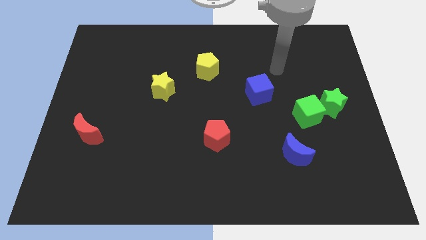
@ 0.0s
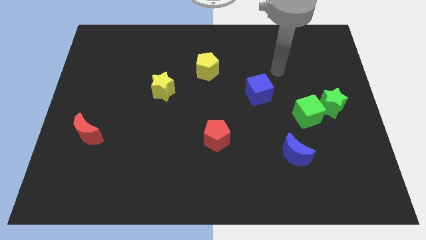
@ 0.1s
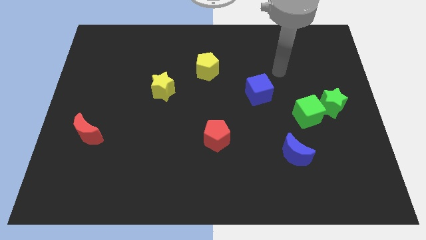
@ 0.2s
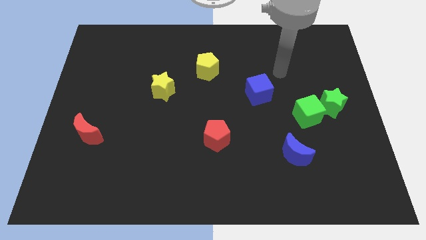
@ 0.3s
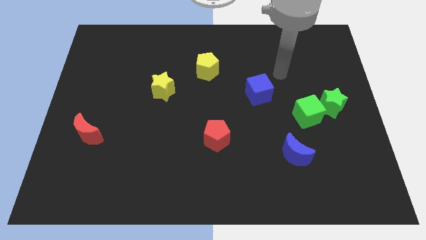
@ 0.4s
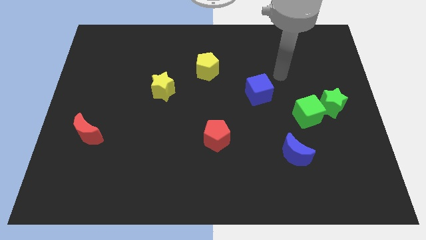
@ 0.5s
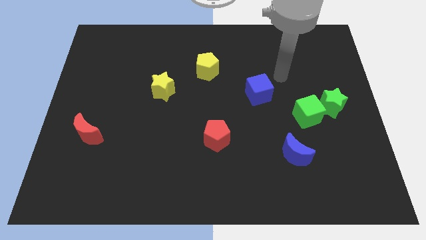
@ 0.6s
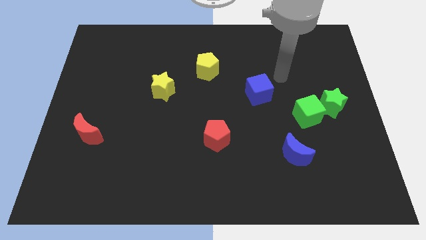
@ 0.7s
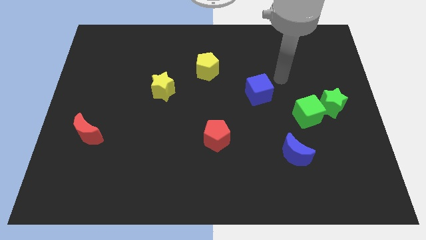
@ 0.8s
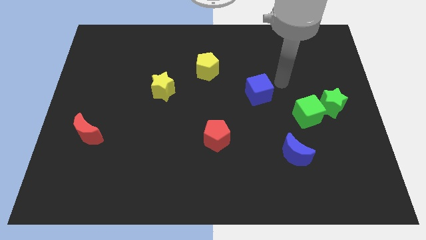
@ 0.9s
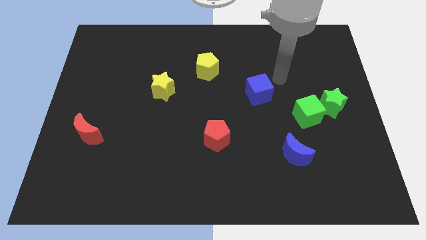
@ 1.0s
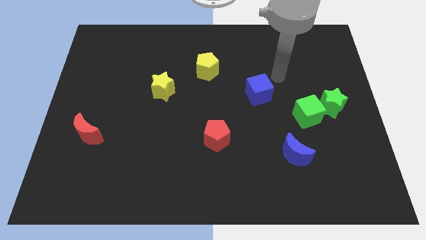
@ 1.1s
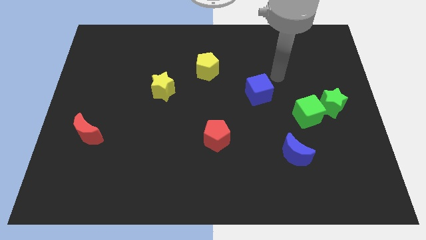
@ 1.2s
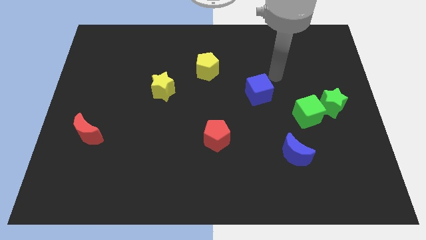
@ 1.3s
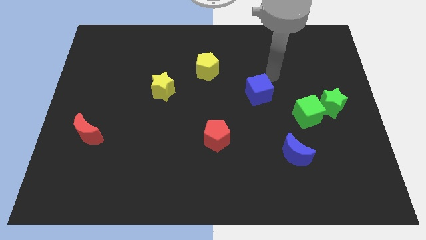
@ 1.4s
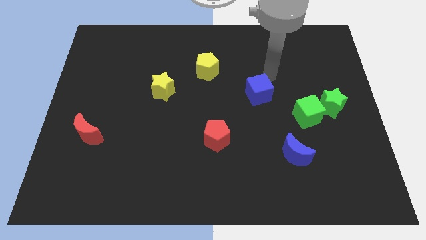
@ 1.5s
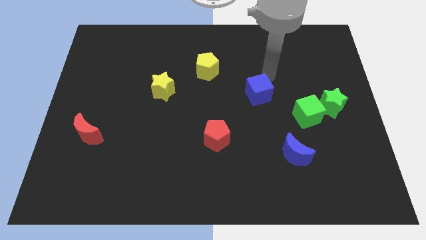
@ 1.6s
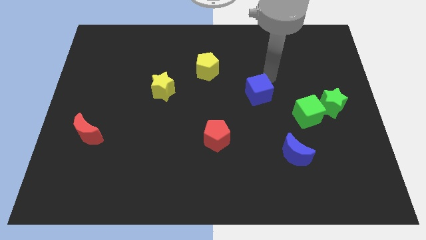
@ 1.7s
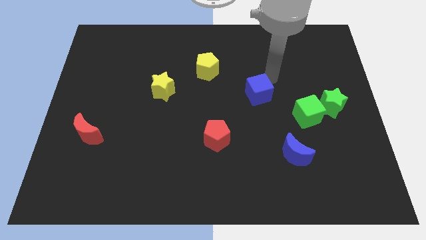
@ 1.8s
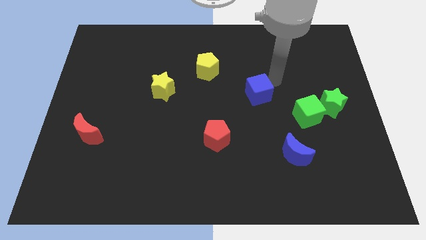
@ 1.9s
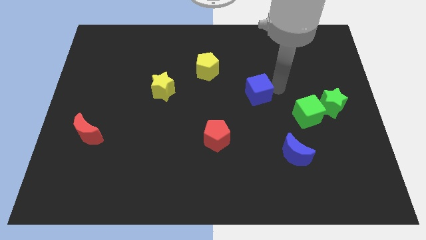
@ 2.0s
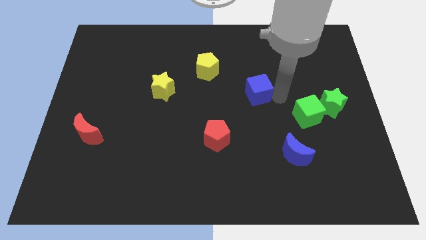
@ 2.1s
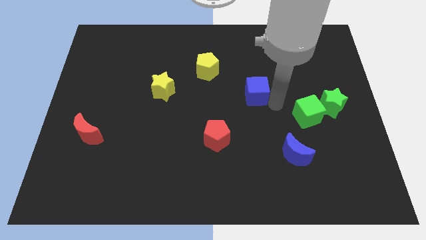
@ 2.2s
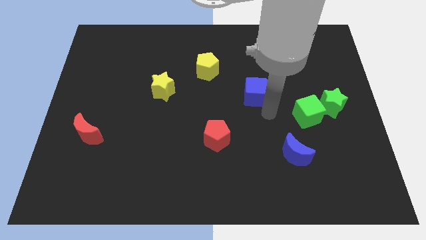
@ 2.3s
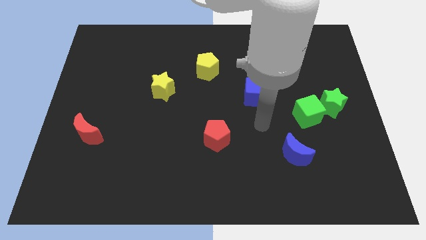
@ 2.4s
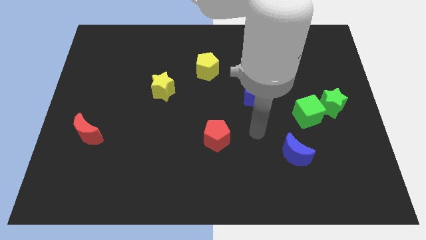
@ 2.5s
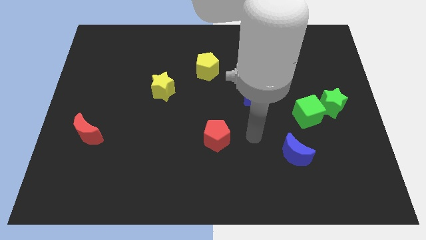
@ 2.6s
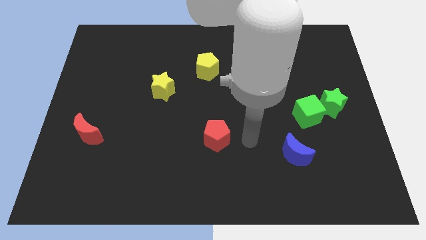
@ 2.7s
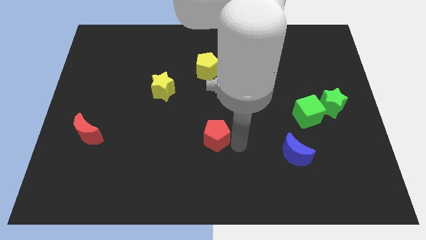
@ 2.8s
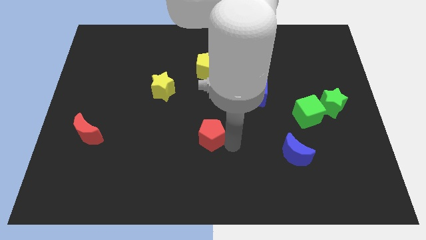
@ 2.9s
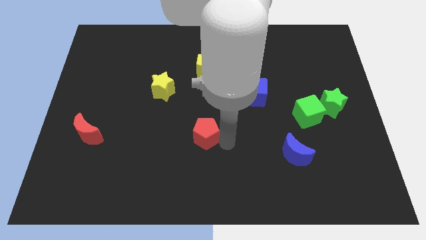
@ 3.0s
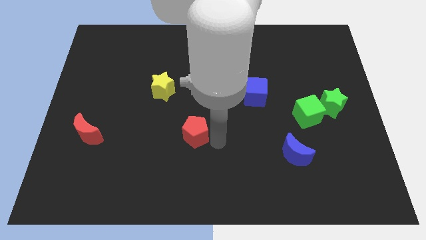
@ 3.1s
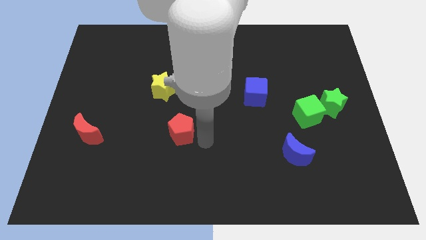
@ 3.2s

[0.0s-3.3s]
slightly push the blue cube

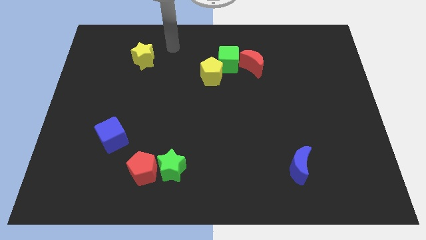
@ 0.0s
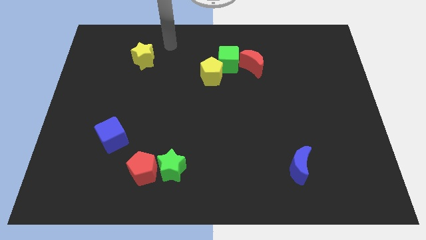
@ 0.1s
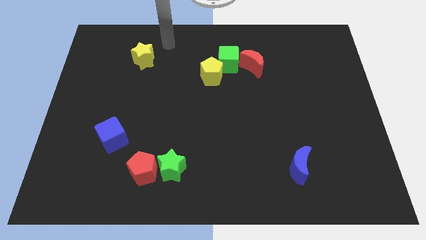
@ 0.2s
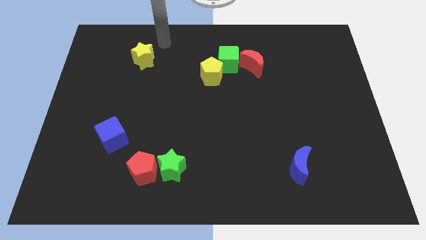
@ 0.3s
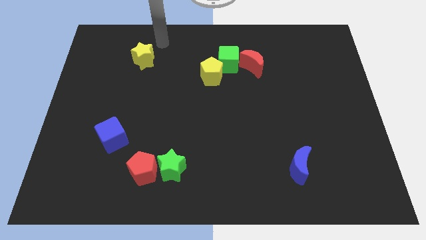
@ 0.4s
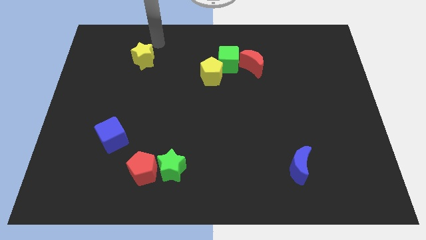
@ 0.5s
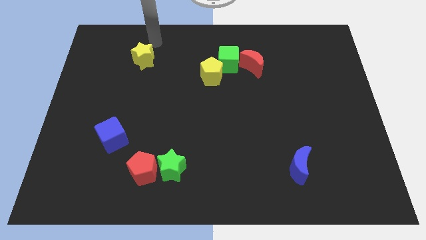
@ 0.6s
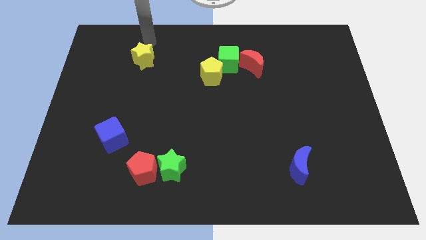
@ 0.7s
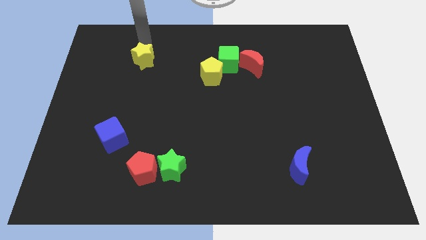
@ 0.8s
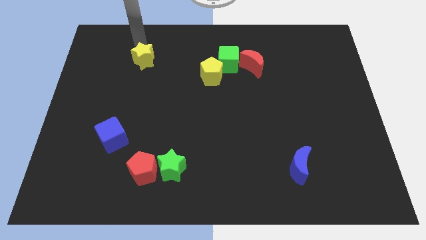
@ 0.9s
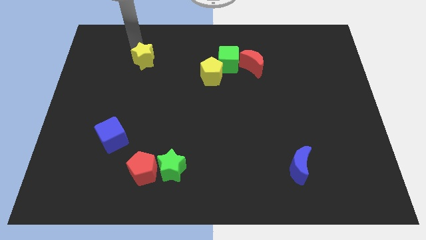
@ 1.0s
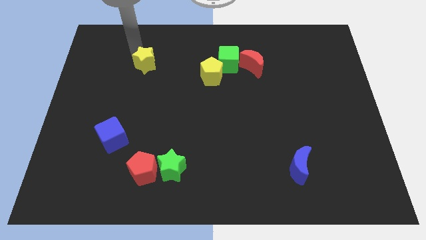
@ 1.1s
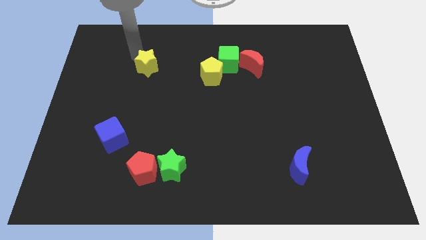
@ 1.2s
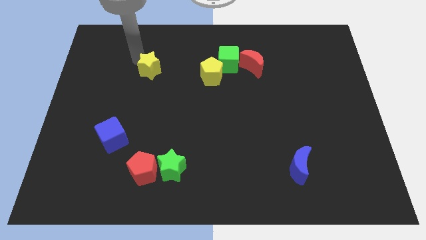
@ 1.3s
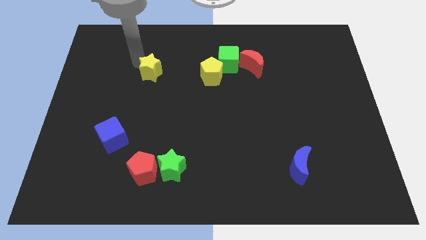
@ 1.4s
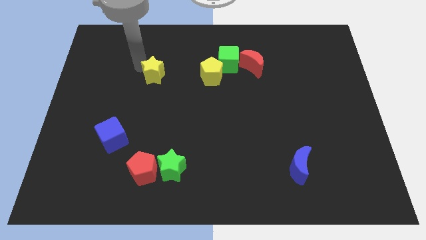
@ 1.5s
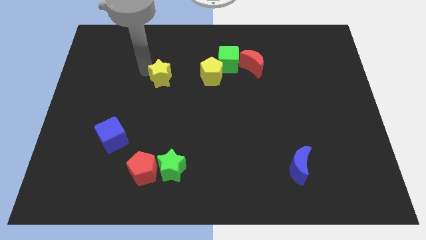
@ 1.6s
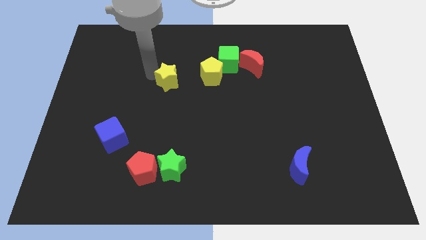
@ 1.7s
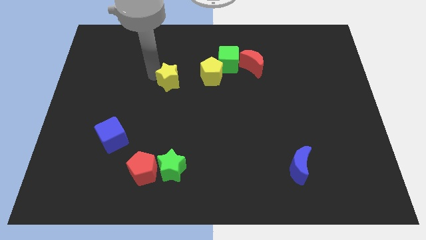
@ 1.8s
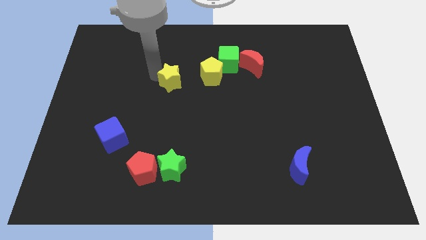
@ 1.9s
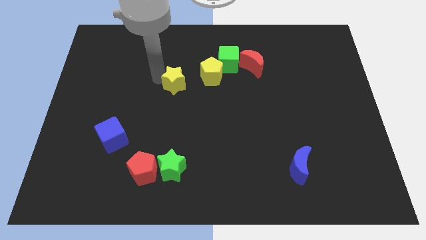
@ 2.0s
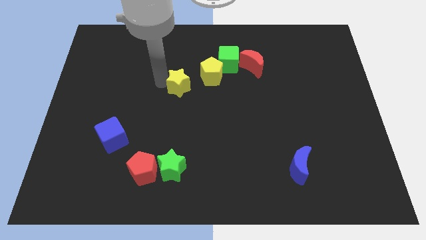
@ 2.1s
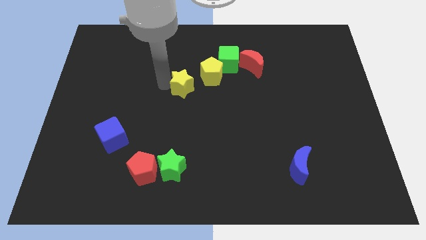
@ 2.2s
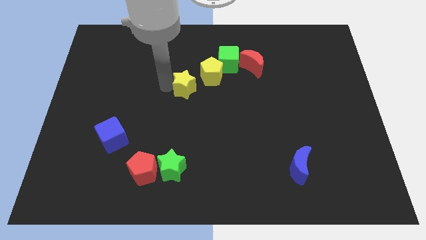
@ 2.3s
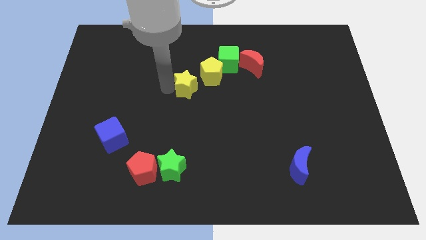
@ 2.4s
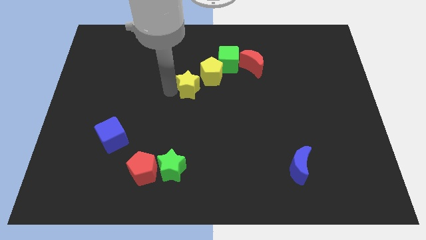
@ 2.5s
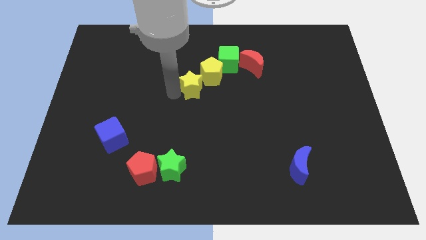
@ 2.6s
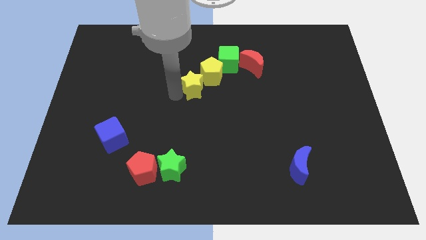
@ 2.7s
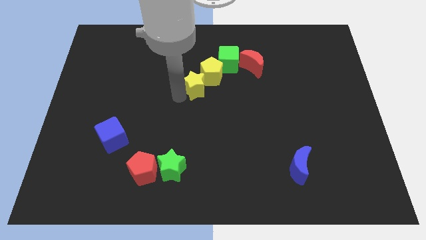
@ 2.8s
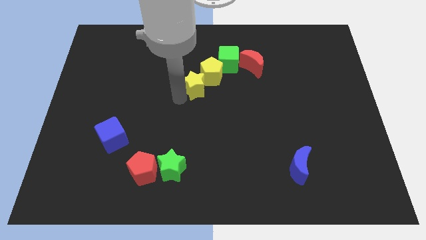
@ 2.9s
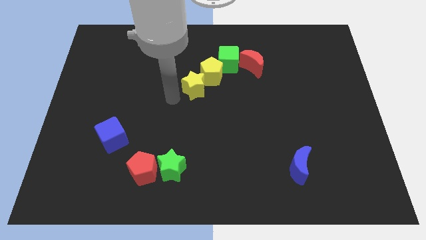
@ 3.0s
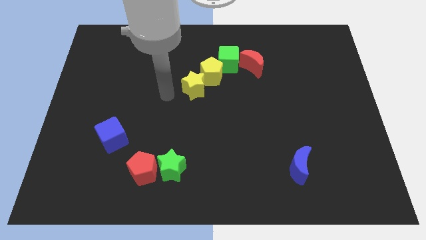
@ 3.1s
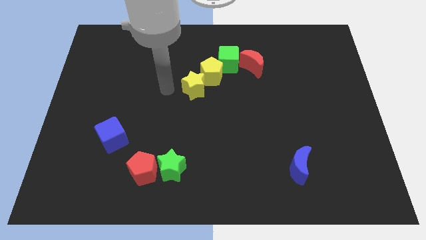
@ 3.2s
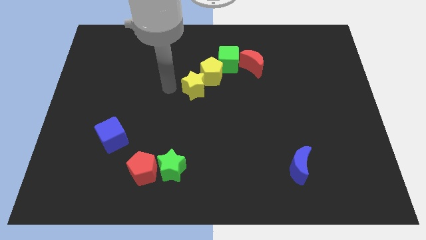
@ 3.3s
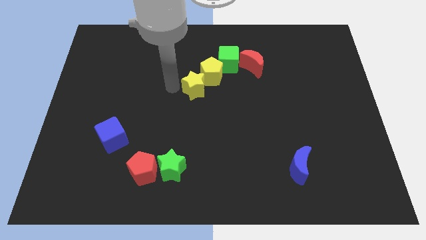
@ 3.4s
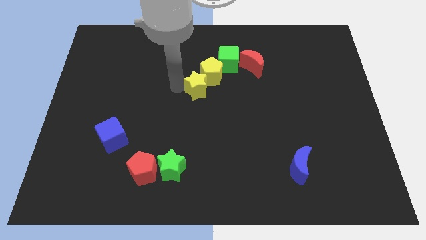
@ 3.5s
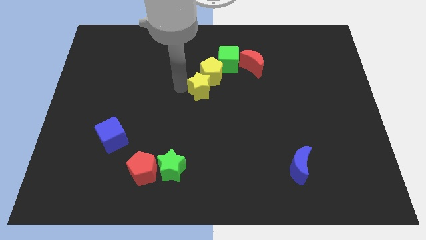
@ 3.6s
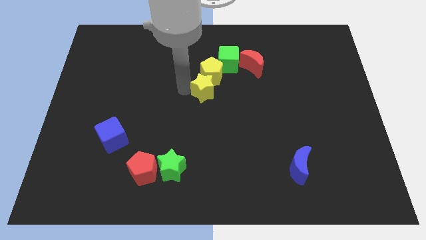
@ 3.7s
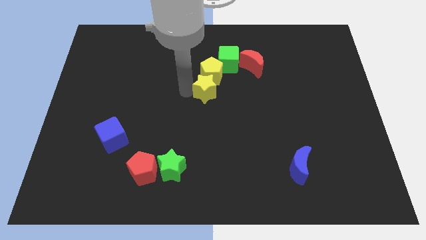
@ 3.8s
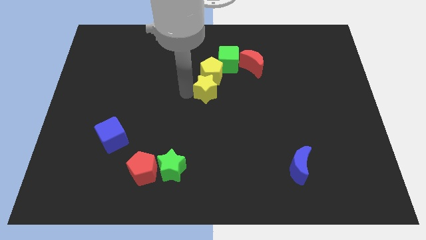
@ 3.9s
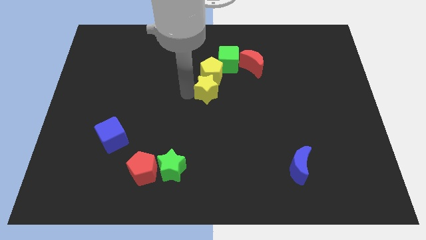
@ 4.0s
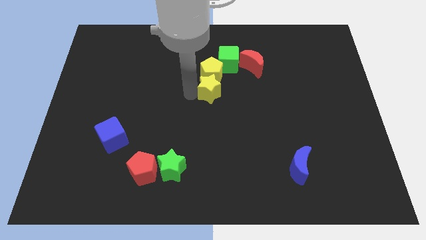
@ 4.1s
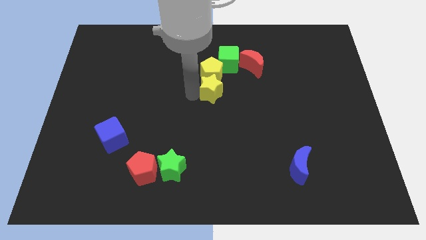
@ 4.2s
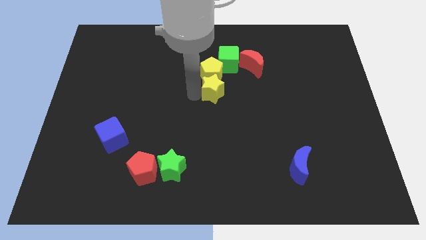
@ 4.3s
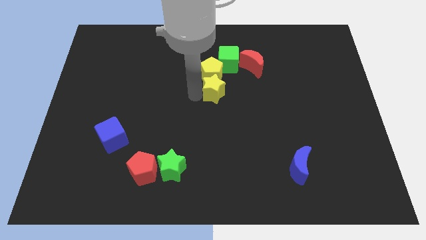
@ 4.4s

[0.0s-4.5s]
put the yellow star at the bottom of the yellow pentagon

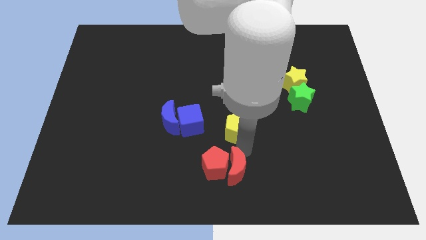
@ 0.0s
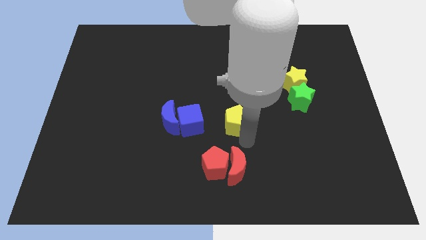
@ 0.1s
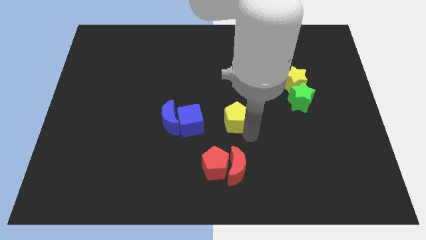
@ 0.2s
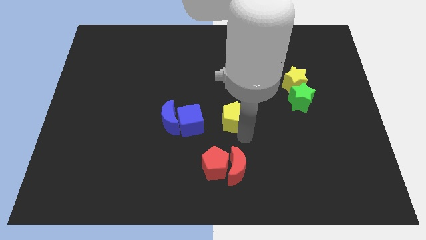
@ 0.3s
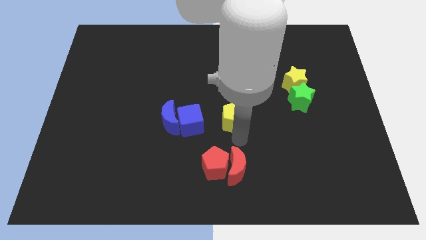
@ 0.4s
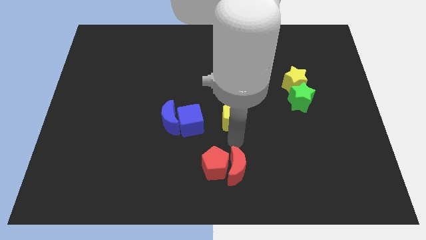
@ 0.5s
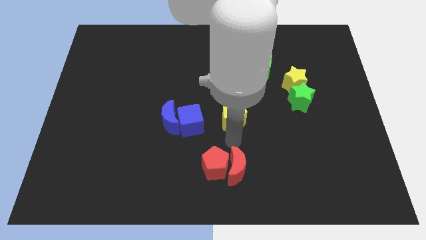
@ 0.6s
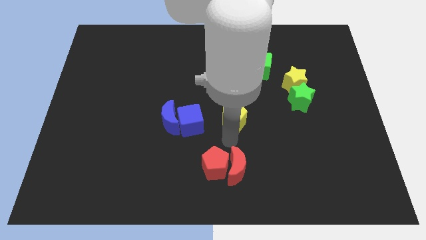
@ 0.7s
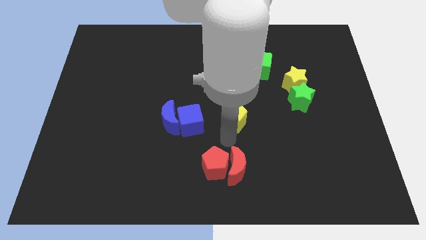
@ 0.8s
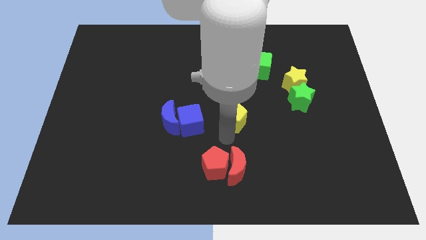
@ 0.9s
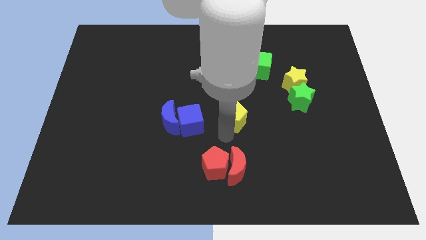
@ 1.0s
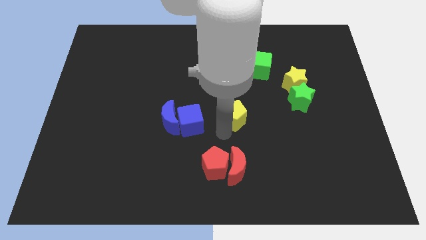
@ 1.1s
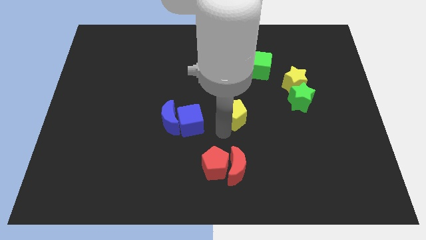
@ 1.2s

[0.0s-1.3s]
move the yellow pentagon to the right of the blue cube
